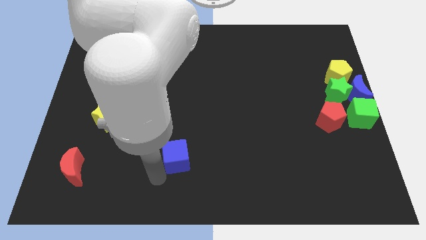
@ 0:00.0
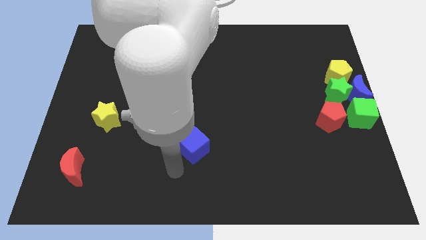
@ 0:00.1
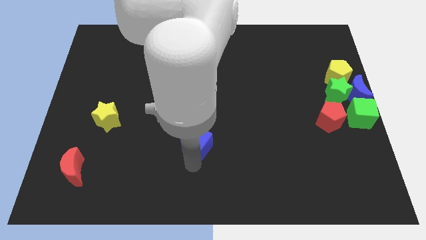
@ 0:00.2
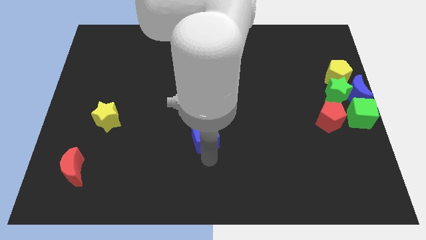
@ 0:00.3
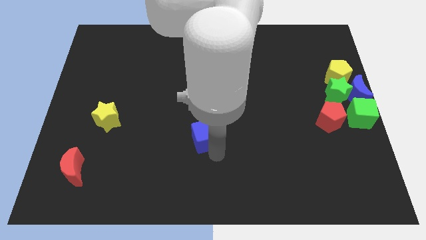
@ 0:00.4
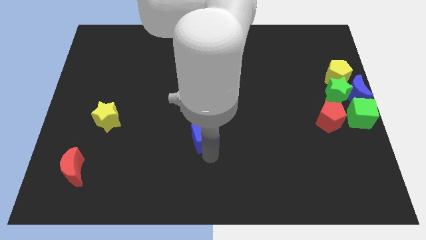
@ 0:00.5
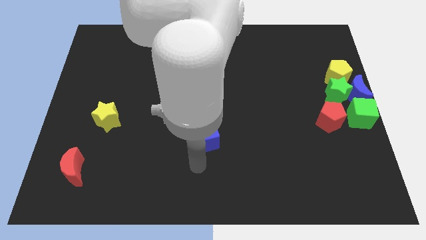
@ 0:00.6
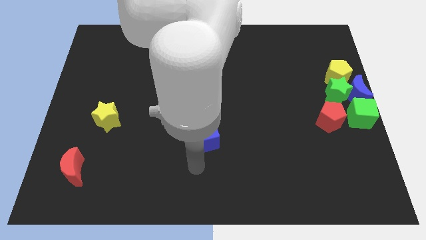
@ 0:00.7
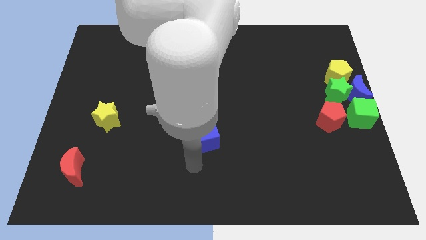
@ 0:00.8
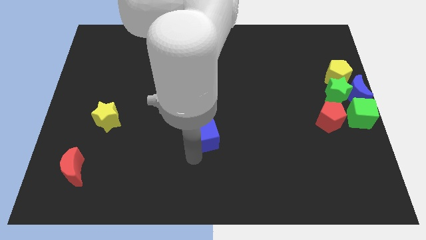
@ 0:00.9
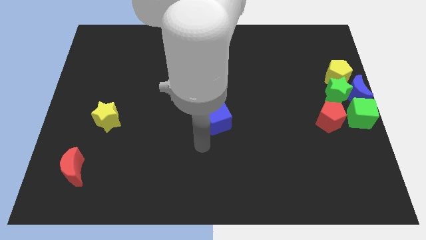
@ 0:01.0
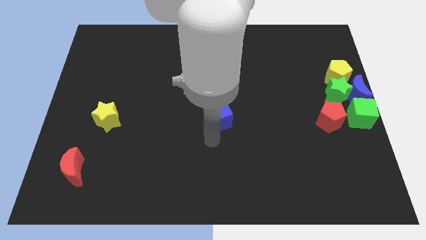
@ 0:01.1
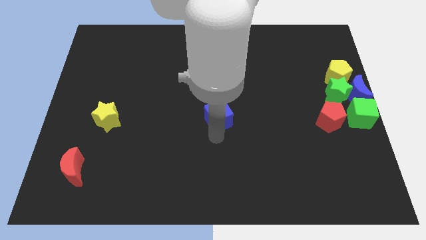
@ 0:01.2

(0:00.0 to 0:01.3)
place the blue cube to the center of the board

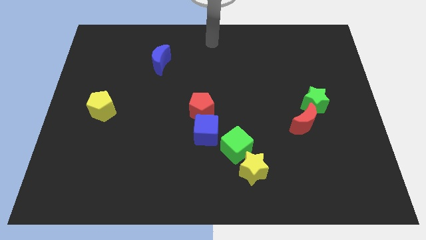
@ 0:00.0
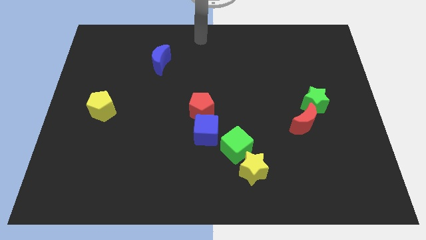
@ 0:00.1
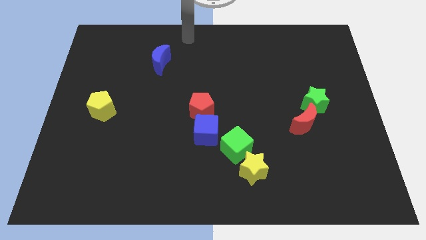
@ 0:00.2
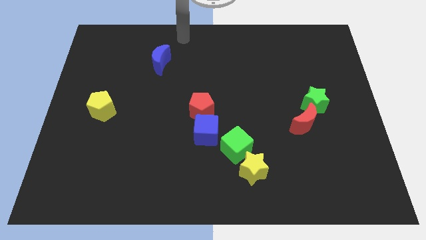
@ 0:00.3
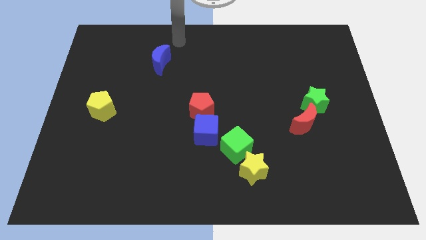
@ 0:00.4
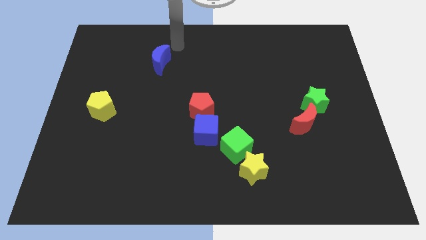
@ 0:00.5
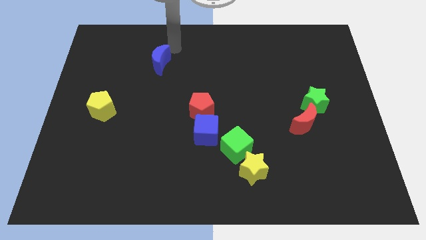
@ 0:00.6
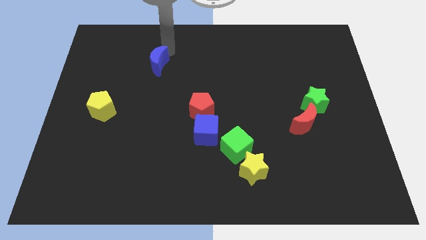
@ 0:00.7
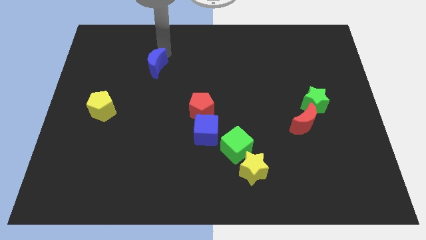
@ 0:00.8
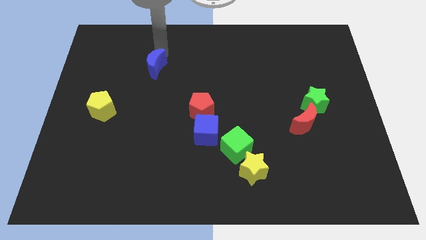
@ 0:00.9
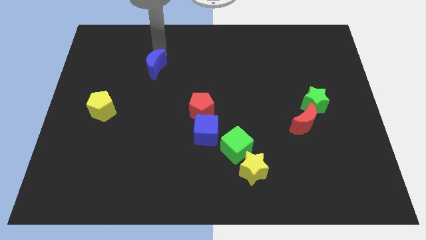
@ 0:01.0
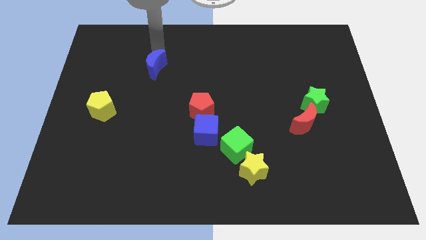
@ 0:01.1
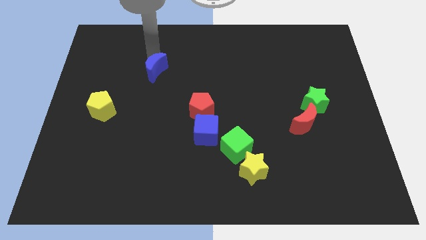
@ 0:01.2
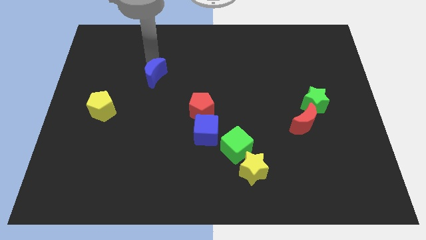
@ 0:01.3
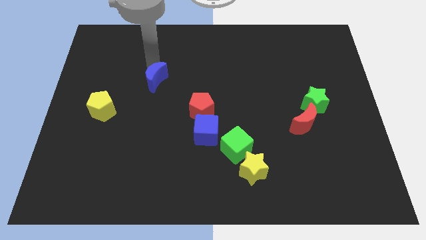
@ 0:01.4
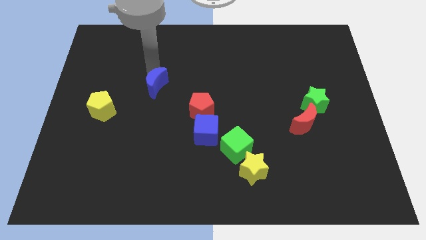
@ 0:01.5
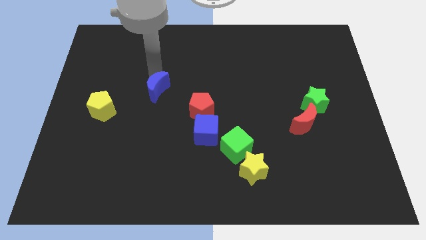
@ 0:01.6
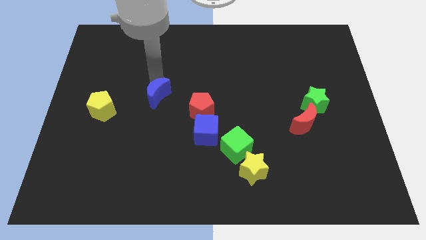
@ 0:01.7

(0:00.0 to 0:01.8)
move the blue moon towards the bottom side of the board

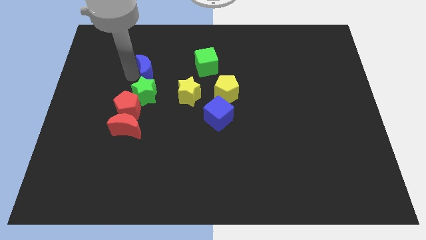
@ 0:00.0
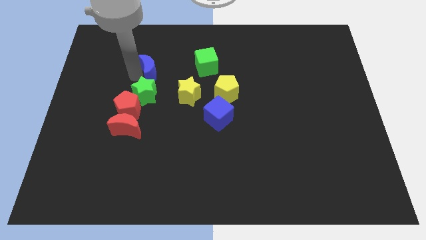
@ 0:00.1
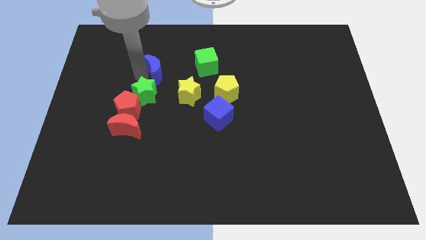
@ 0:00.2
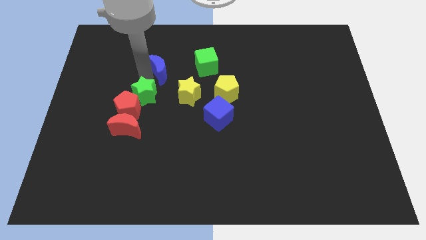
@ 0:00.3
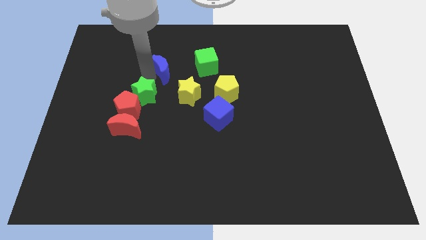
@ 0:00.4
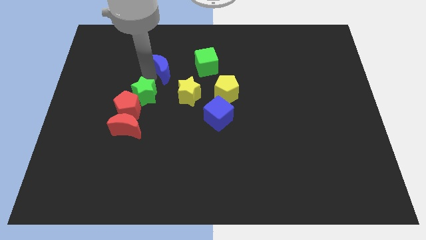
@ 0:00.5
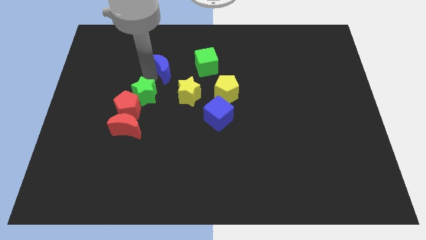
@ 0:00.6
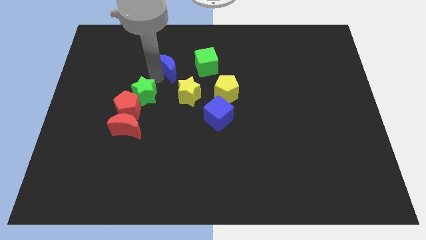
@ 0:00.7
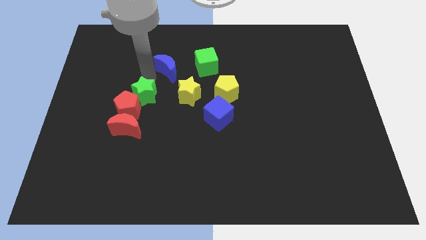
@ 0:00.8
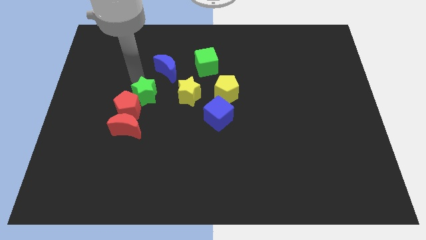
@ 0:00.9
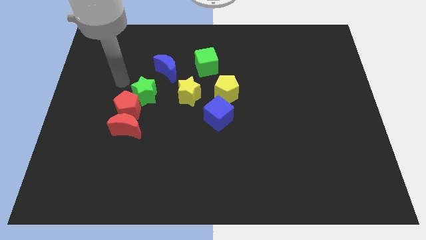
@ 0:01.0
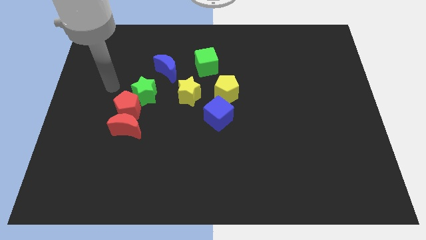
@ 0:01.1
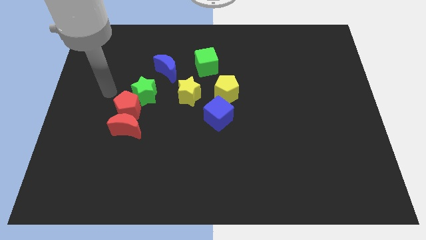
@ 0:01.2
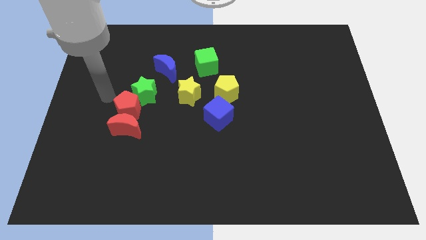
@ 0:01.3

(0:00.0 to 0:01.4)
push the blue crescent to the right

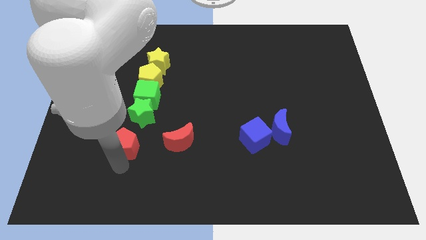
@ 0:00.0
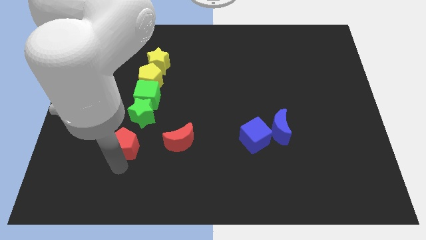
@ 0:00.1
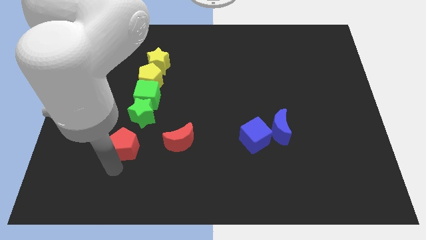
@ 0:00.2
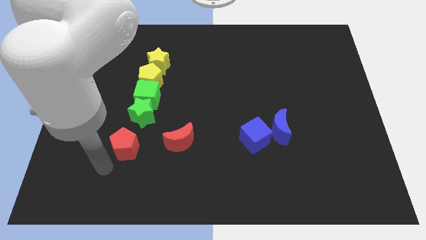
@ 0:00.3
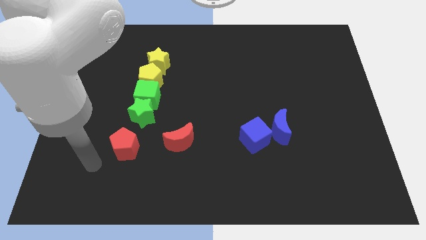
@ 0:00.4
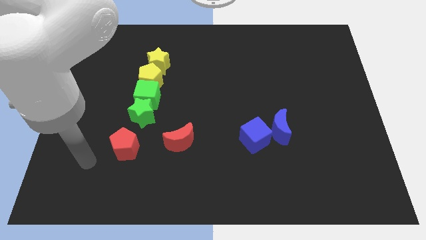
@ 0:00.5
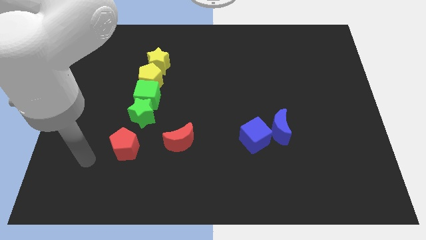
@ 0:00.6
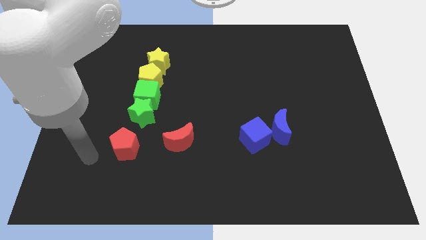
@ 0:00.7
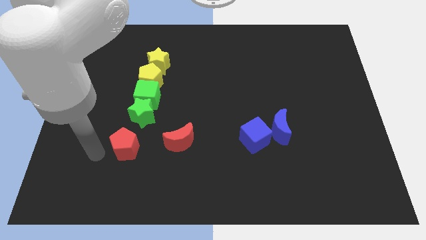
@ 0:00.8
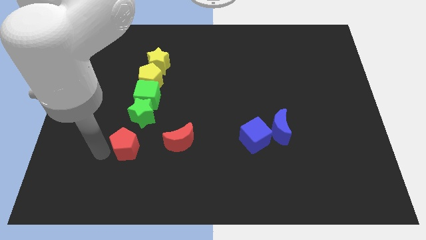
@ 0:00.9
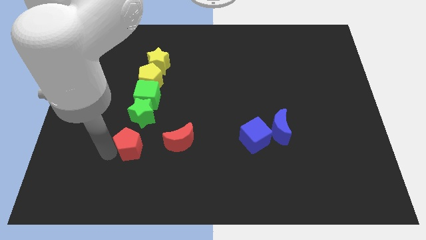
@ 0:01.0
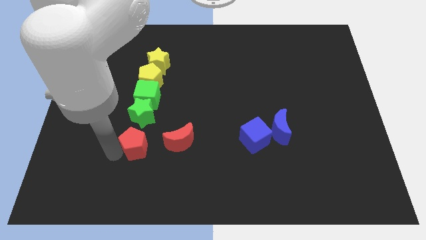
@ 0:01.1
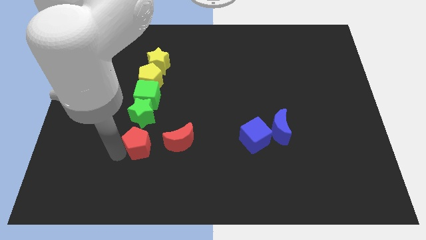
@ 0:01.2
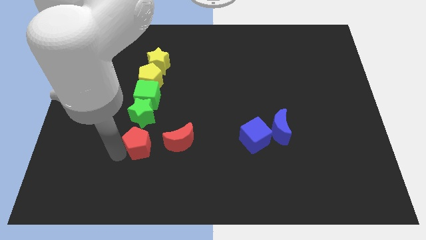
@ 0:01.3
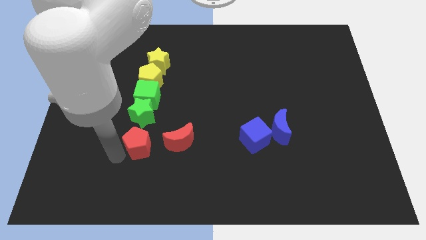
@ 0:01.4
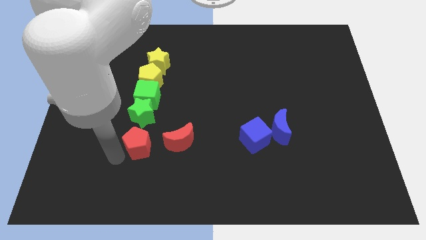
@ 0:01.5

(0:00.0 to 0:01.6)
slide the red pentagon below the green star

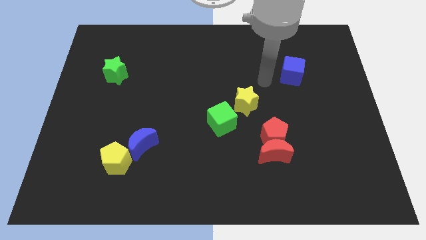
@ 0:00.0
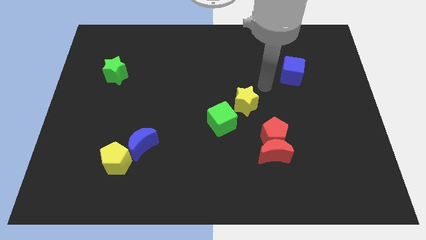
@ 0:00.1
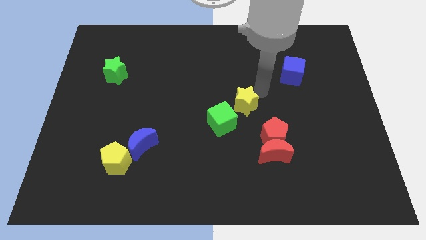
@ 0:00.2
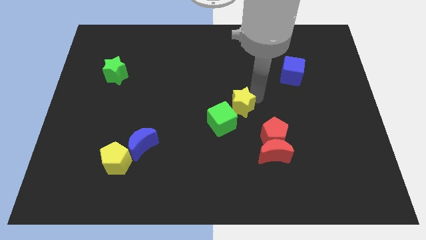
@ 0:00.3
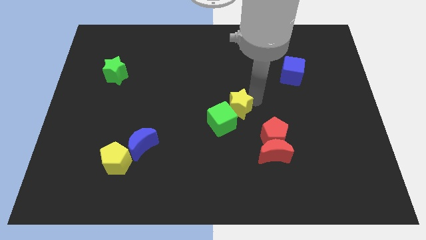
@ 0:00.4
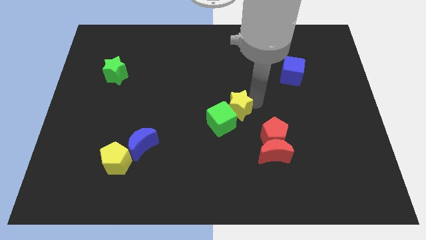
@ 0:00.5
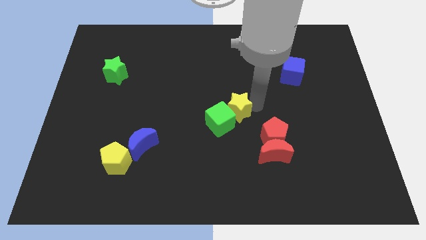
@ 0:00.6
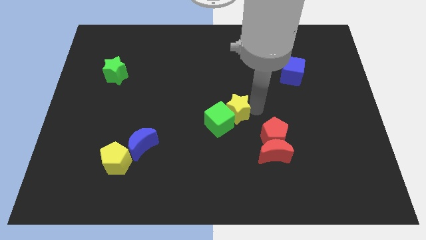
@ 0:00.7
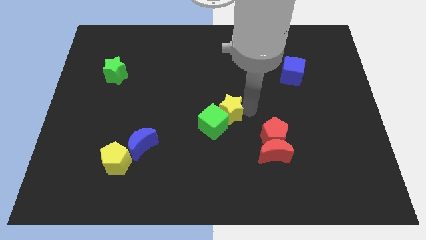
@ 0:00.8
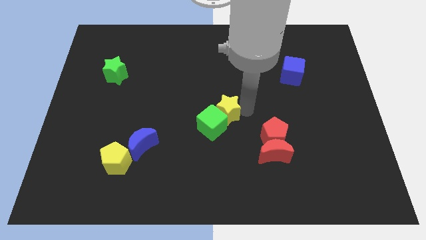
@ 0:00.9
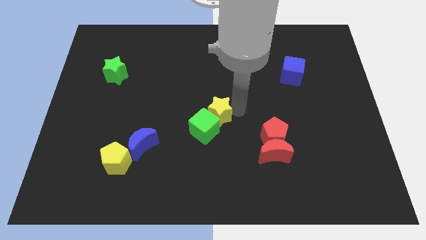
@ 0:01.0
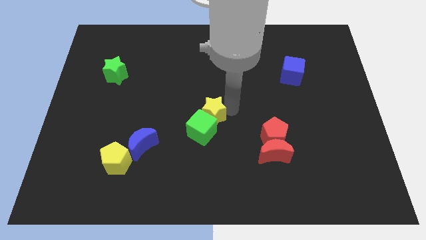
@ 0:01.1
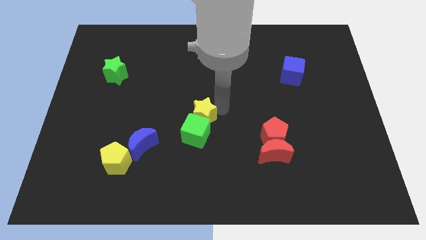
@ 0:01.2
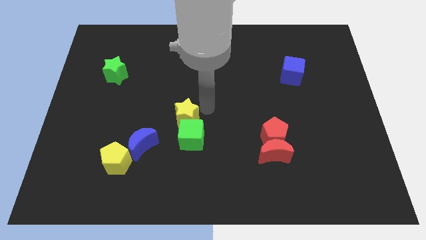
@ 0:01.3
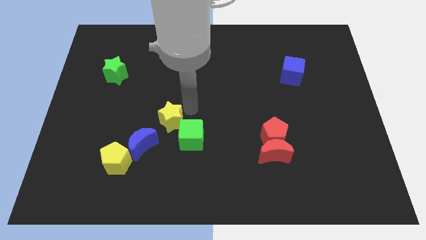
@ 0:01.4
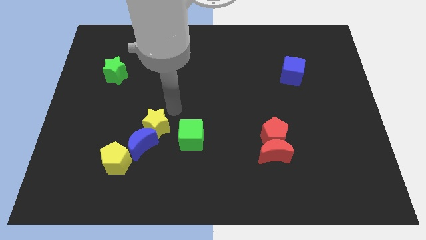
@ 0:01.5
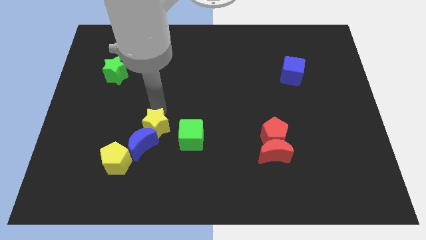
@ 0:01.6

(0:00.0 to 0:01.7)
push the yellow star towards the blue crescent

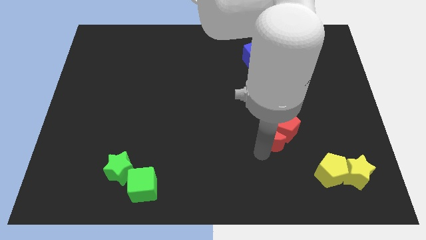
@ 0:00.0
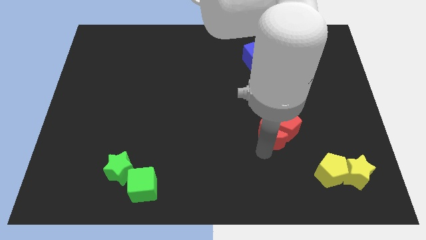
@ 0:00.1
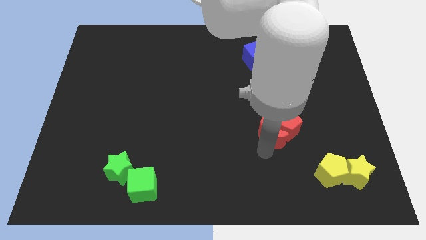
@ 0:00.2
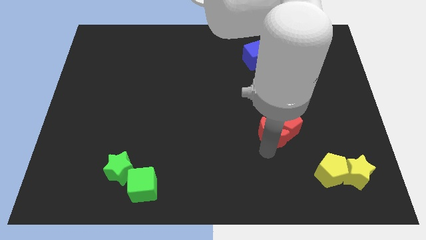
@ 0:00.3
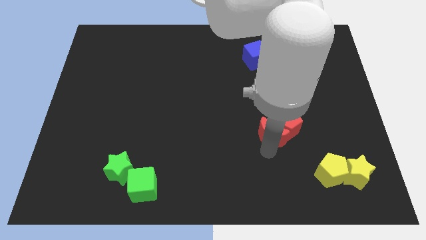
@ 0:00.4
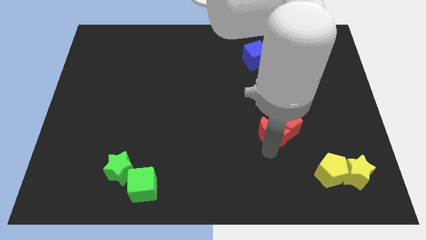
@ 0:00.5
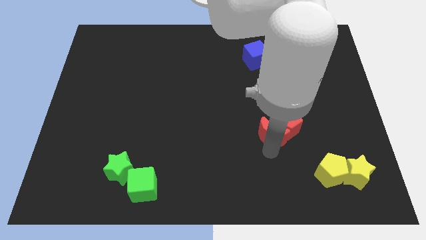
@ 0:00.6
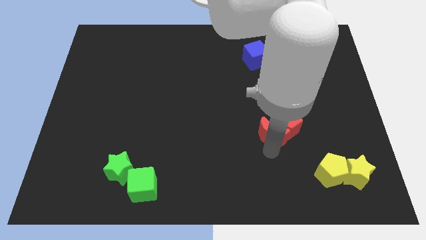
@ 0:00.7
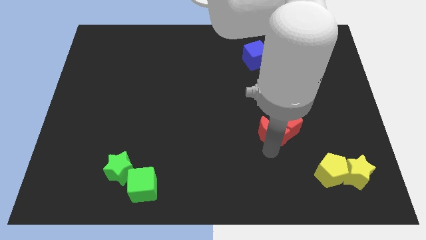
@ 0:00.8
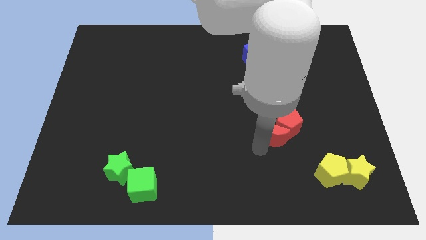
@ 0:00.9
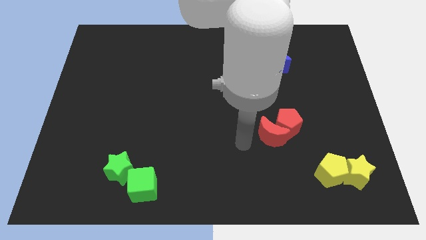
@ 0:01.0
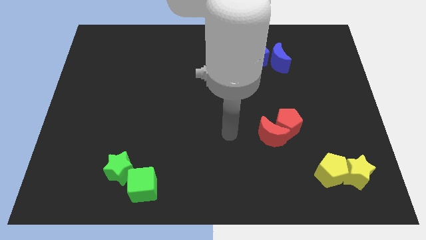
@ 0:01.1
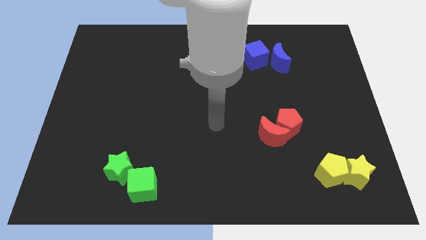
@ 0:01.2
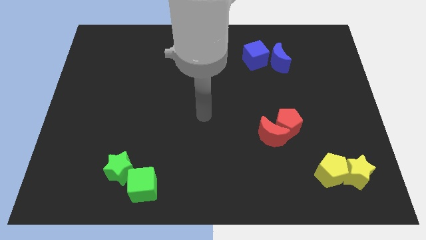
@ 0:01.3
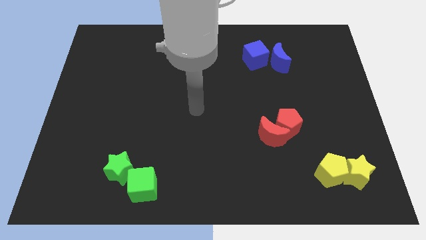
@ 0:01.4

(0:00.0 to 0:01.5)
push the red blocks up slightly
